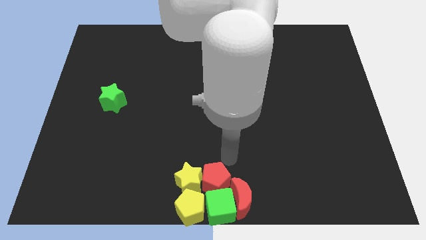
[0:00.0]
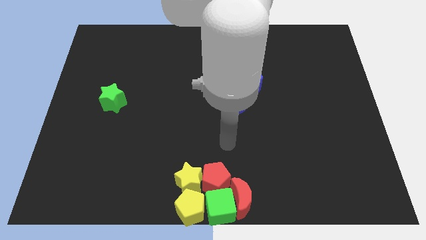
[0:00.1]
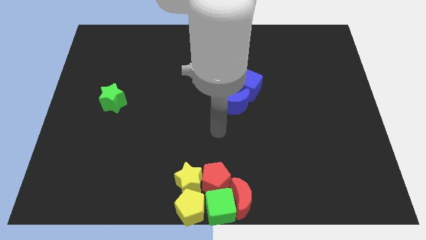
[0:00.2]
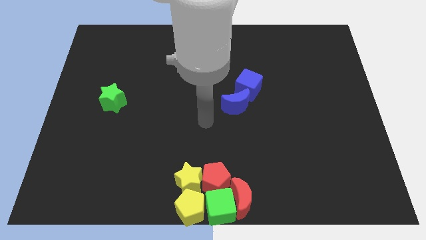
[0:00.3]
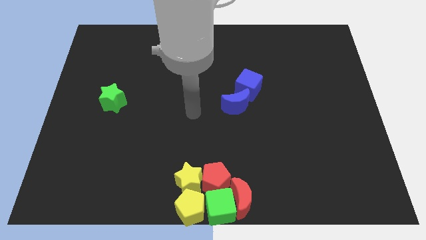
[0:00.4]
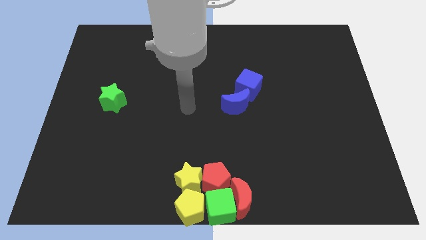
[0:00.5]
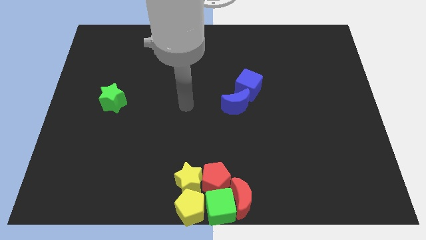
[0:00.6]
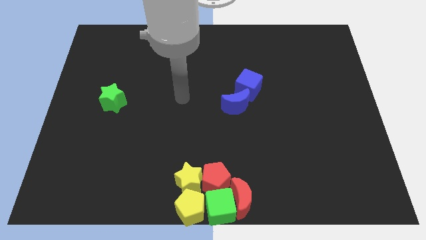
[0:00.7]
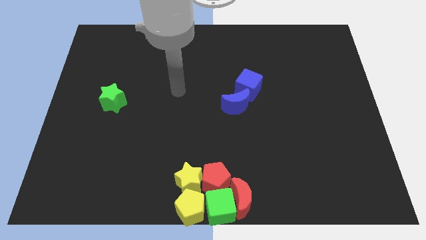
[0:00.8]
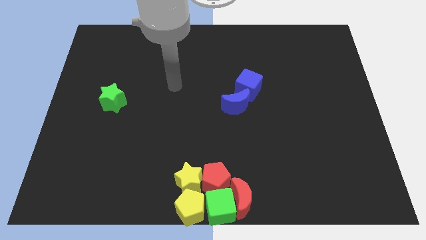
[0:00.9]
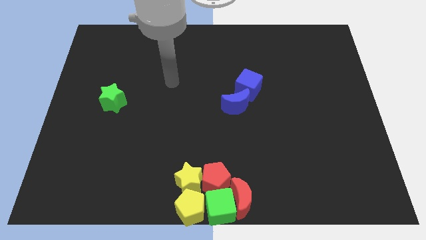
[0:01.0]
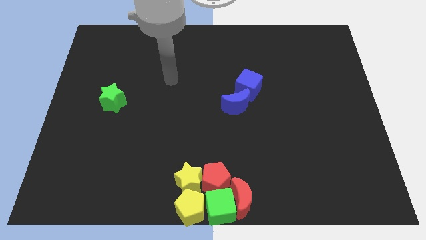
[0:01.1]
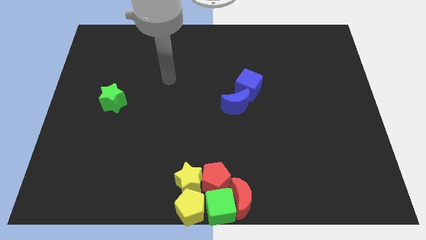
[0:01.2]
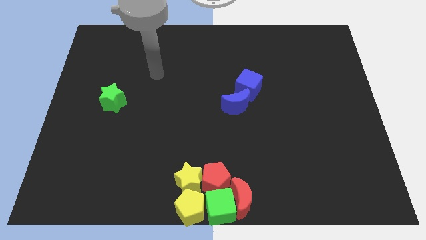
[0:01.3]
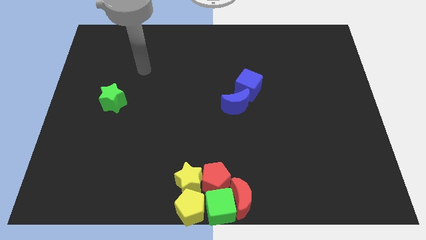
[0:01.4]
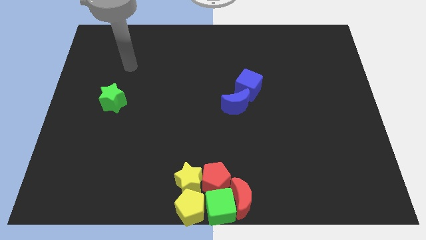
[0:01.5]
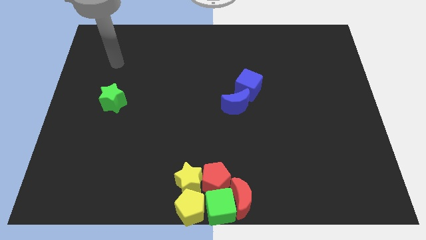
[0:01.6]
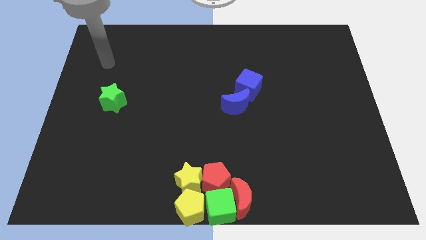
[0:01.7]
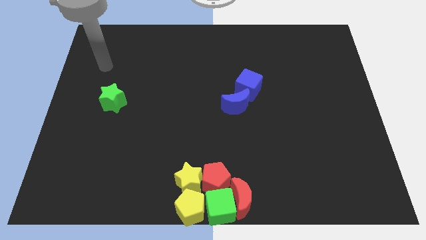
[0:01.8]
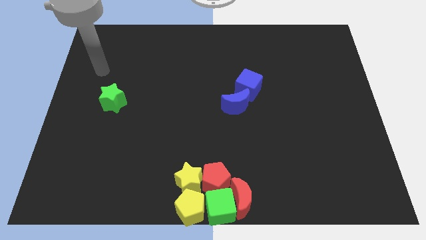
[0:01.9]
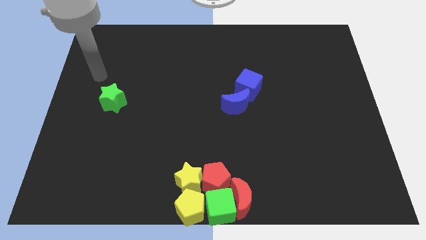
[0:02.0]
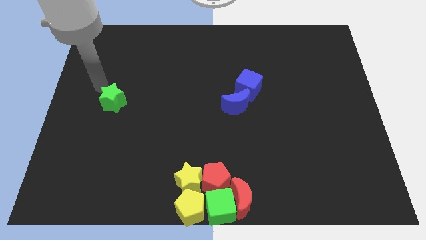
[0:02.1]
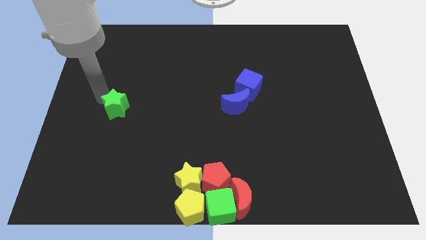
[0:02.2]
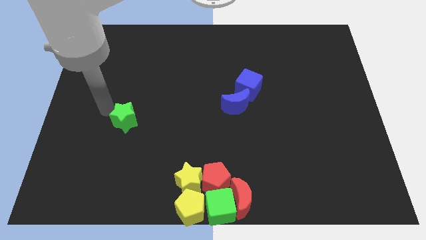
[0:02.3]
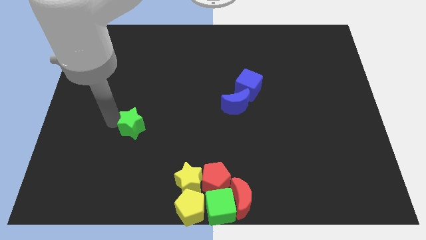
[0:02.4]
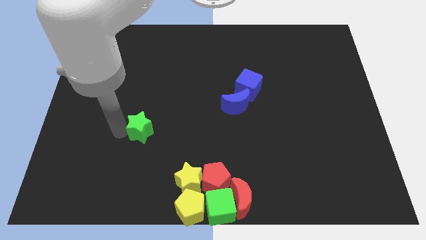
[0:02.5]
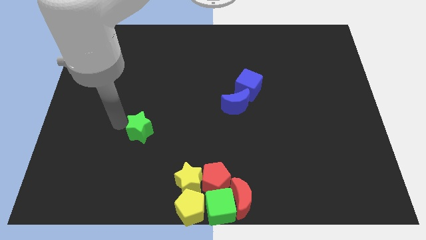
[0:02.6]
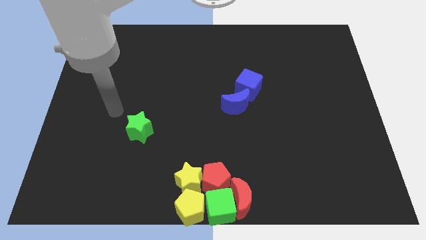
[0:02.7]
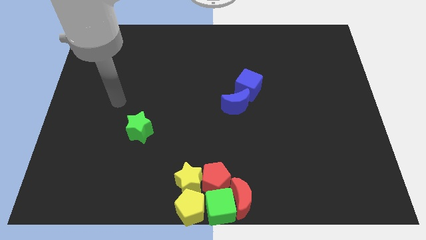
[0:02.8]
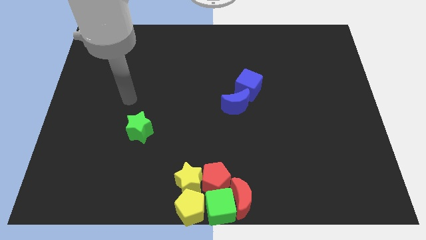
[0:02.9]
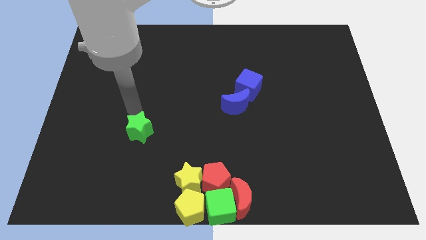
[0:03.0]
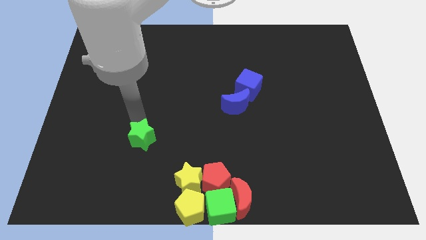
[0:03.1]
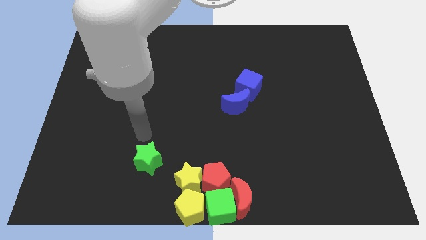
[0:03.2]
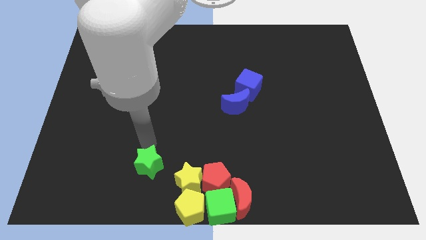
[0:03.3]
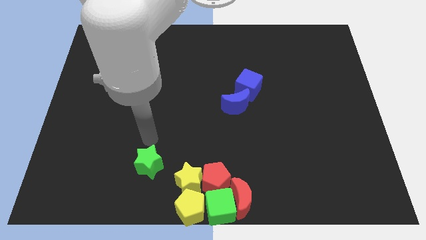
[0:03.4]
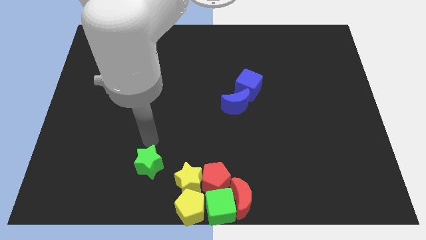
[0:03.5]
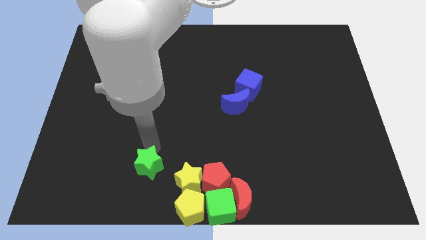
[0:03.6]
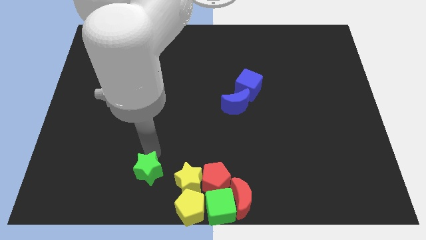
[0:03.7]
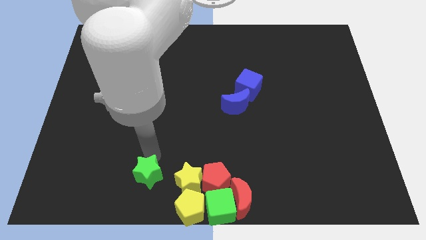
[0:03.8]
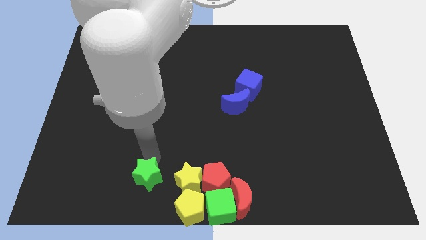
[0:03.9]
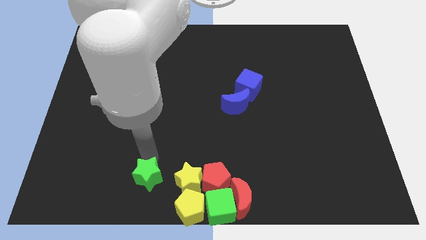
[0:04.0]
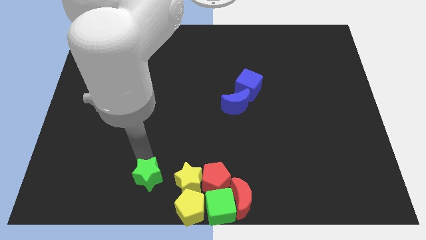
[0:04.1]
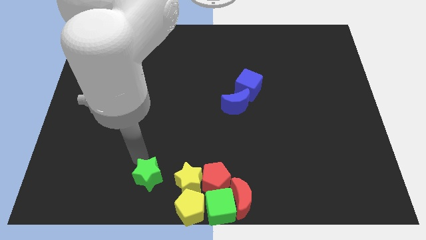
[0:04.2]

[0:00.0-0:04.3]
push the green star to the left of the yellow star

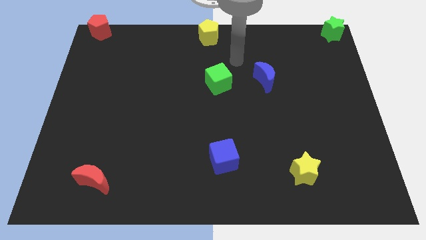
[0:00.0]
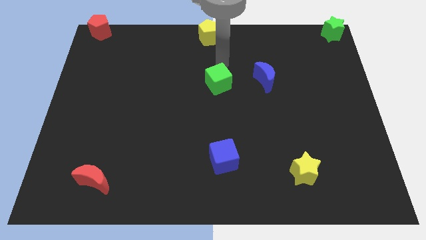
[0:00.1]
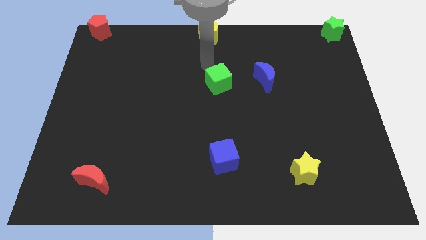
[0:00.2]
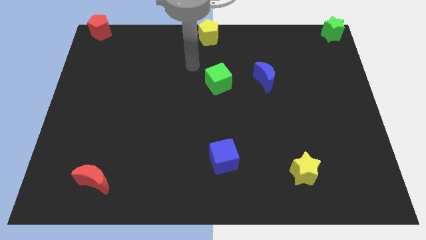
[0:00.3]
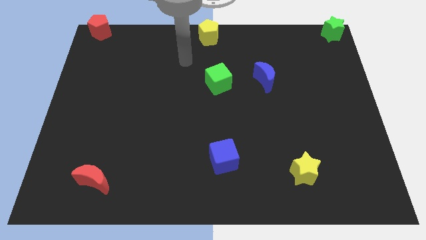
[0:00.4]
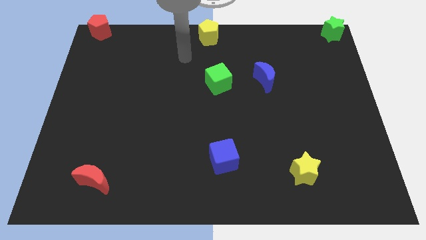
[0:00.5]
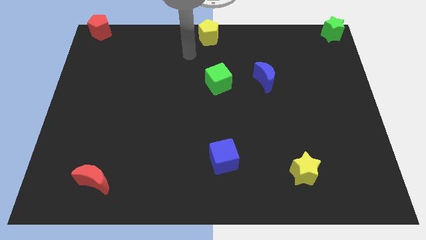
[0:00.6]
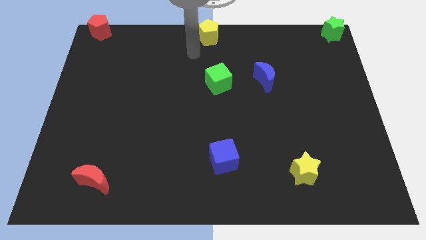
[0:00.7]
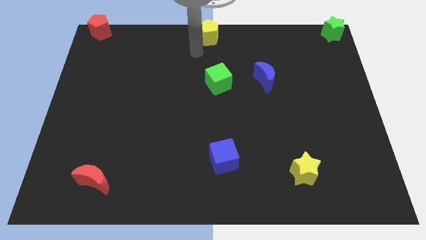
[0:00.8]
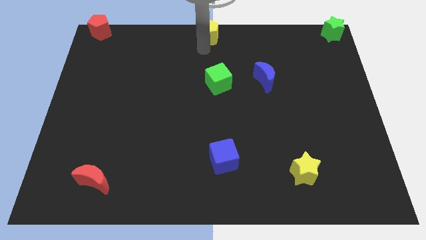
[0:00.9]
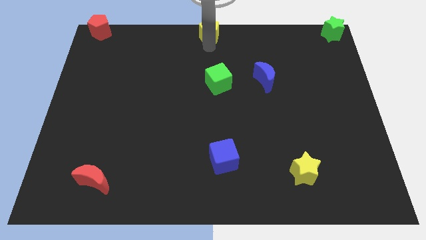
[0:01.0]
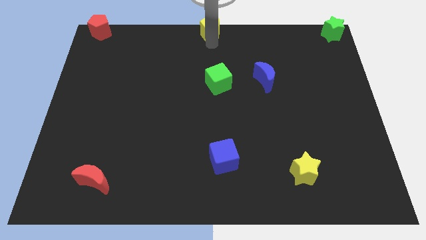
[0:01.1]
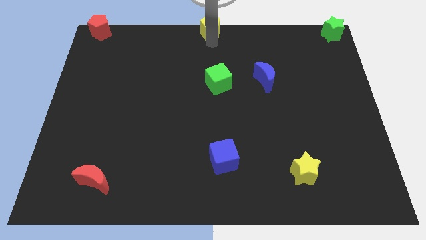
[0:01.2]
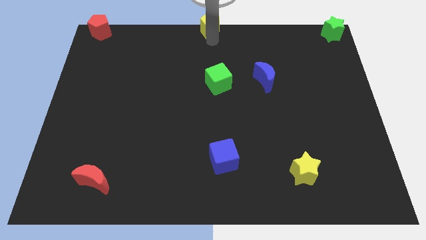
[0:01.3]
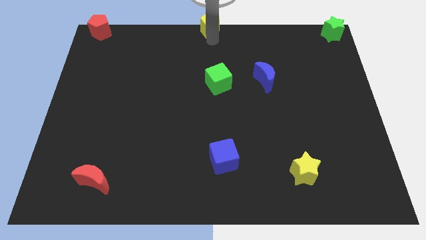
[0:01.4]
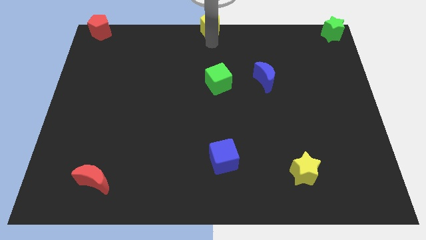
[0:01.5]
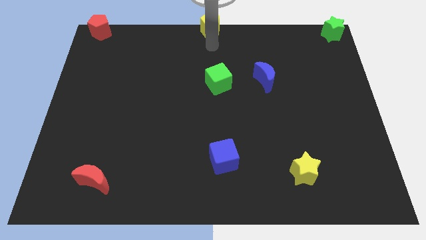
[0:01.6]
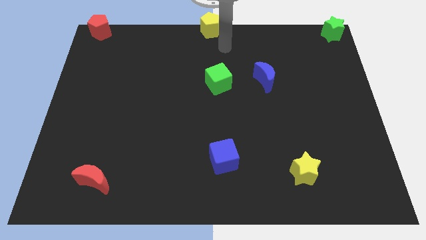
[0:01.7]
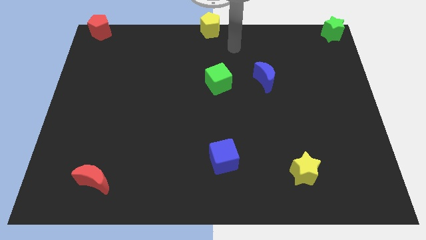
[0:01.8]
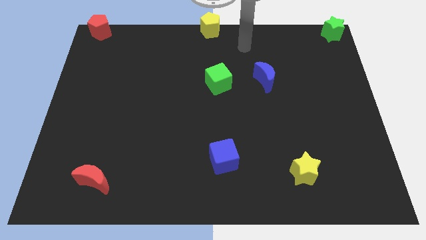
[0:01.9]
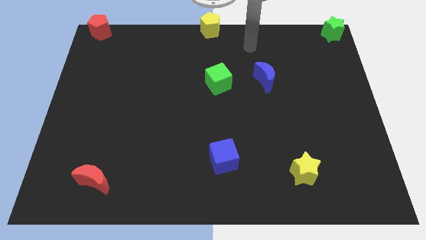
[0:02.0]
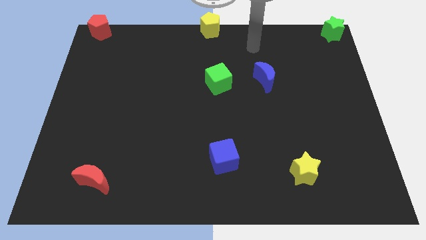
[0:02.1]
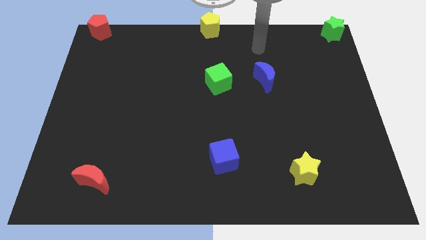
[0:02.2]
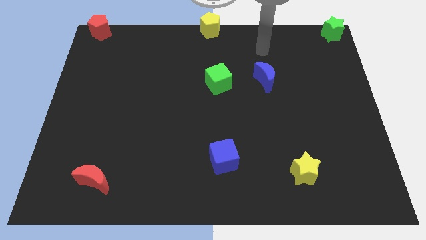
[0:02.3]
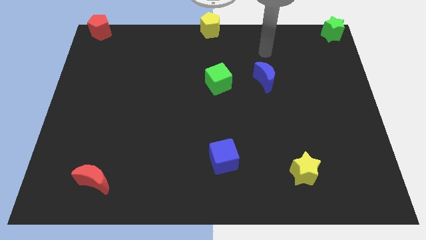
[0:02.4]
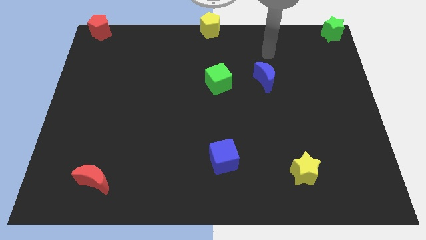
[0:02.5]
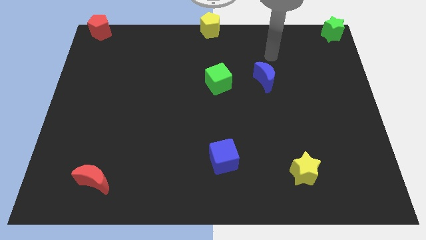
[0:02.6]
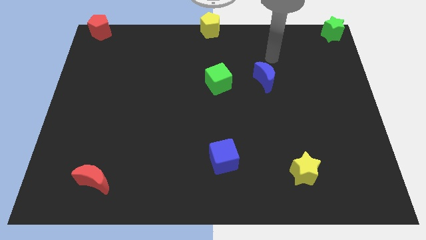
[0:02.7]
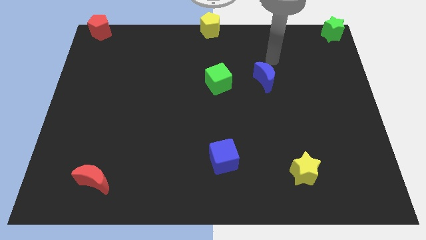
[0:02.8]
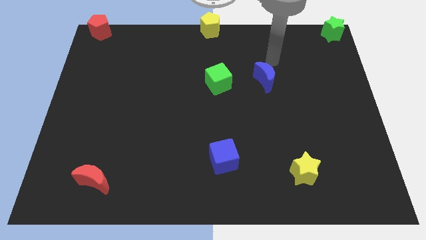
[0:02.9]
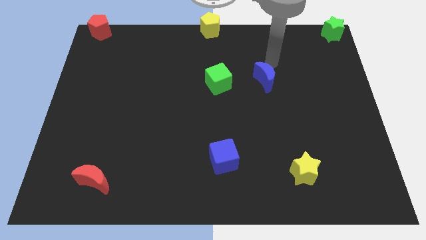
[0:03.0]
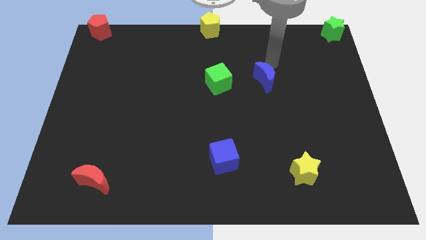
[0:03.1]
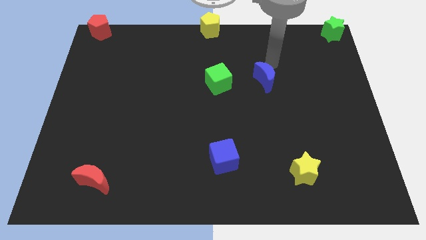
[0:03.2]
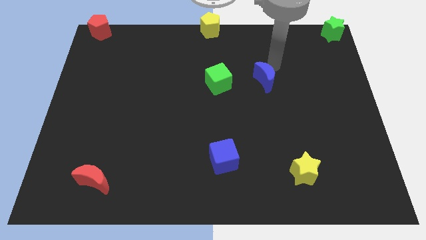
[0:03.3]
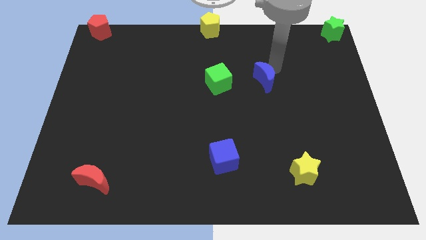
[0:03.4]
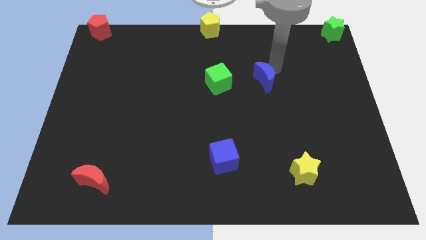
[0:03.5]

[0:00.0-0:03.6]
move the arm towards the blue crescent

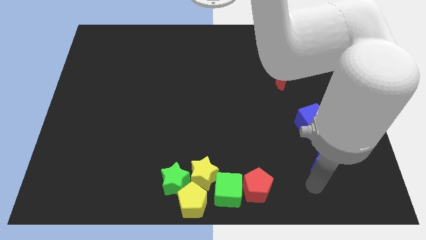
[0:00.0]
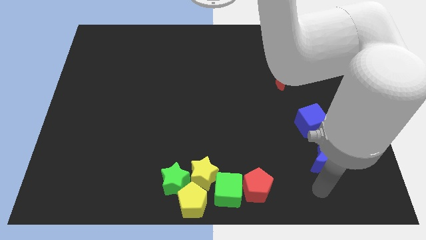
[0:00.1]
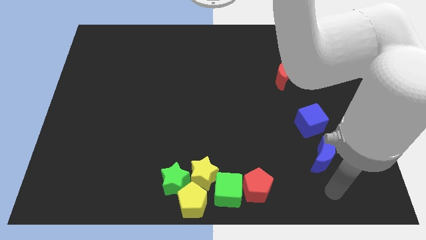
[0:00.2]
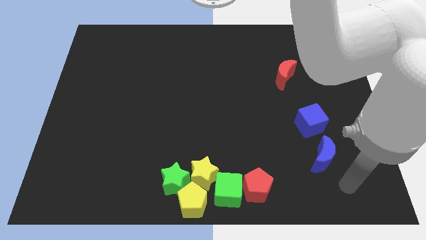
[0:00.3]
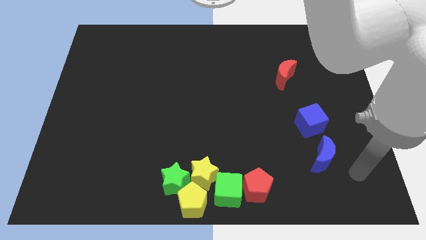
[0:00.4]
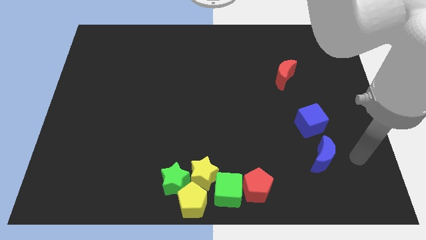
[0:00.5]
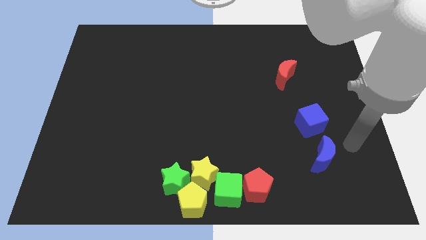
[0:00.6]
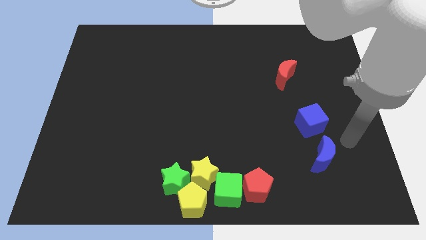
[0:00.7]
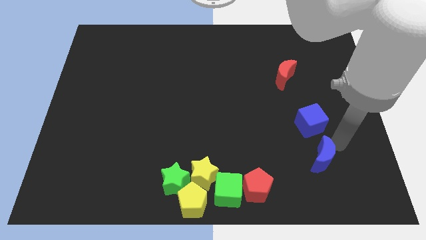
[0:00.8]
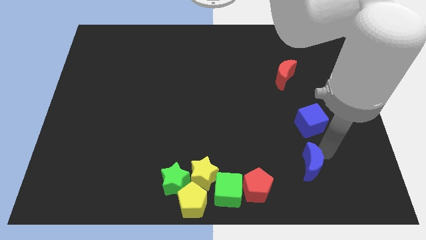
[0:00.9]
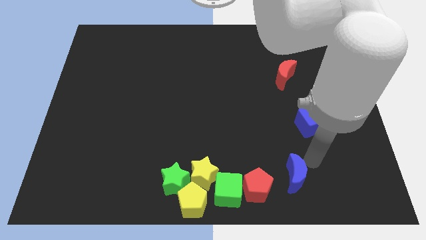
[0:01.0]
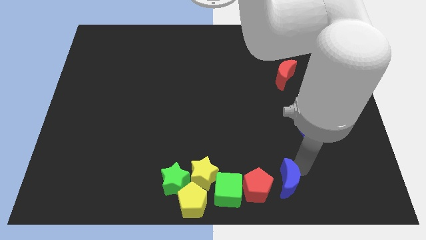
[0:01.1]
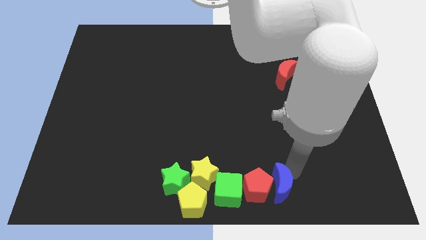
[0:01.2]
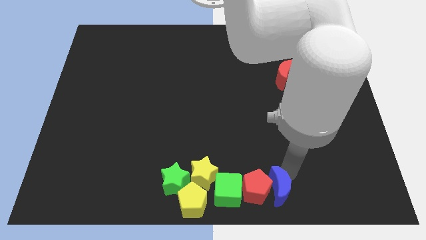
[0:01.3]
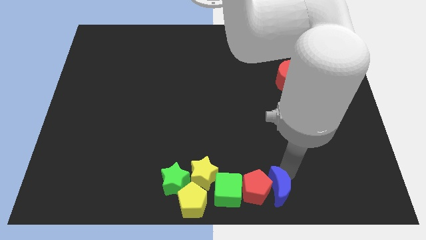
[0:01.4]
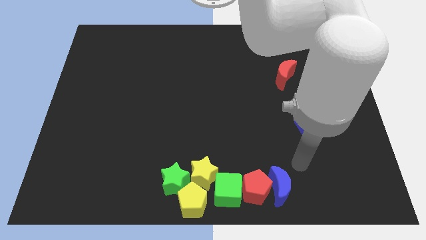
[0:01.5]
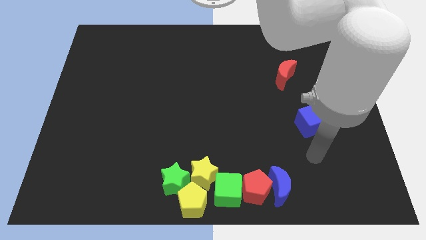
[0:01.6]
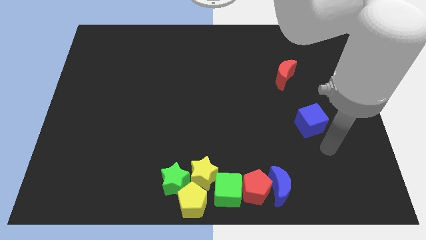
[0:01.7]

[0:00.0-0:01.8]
push blue crescent to the right of red pentagon
